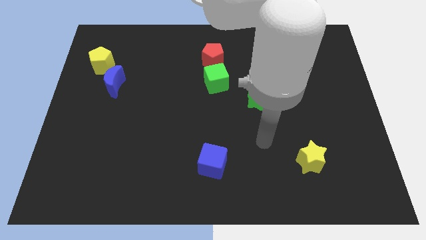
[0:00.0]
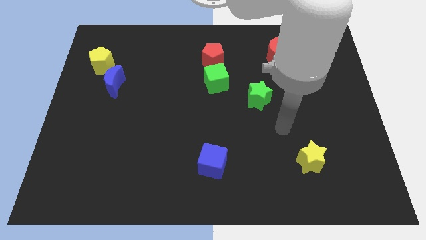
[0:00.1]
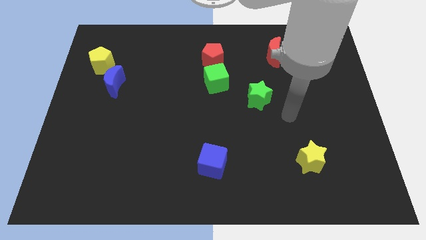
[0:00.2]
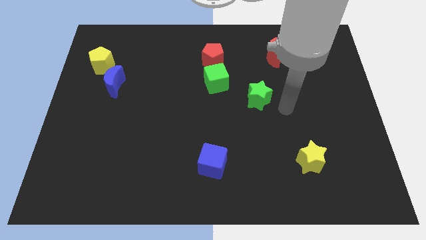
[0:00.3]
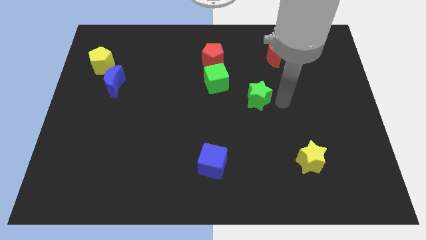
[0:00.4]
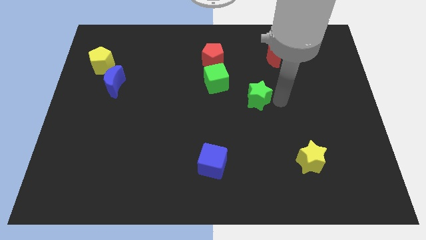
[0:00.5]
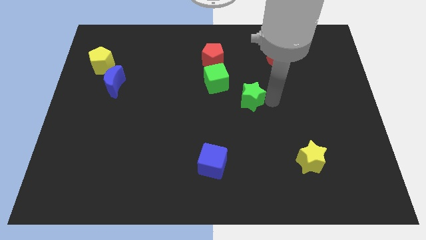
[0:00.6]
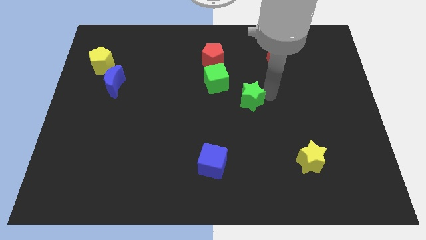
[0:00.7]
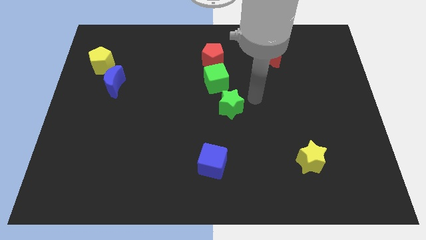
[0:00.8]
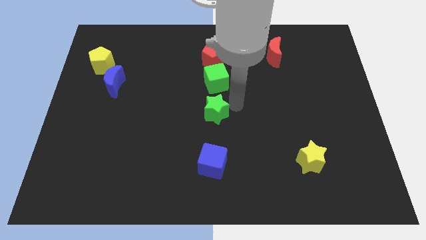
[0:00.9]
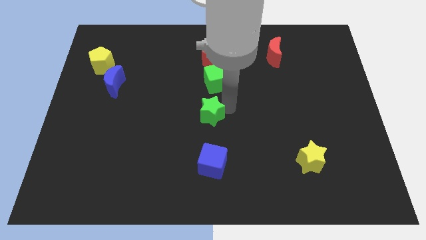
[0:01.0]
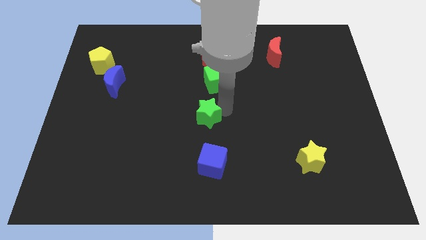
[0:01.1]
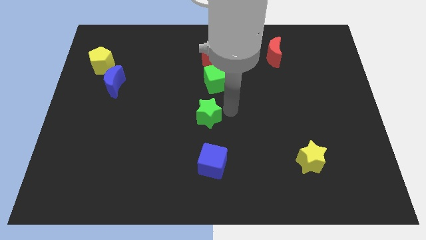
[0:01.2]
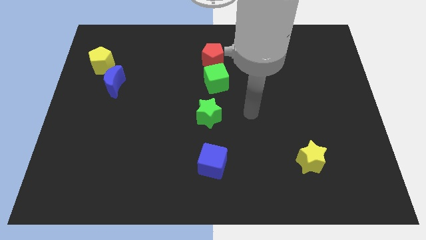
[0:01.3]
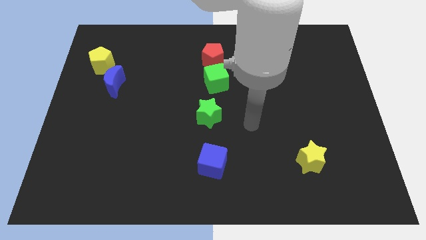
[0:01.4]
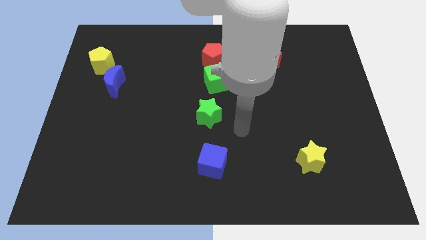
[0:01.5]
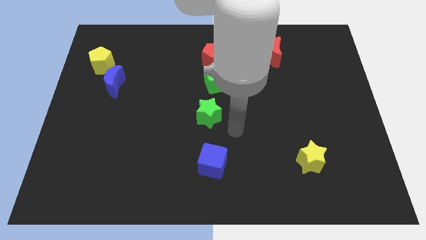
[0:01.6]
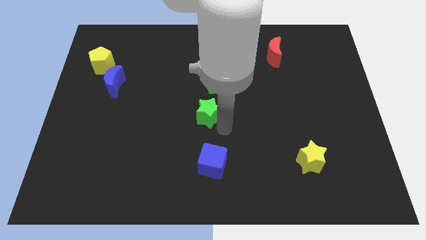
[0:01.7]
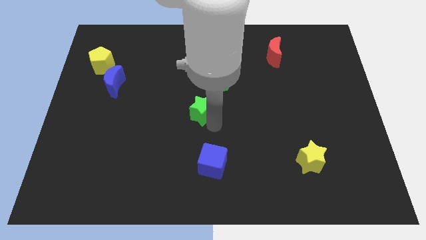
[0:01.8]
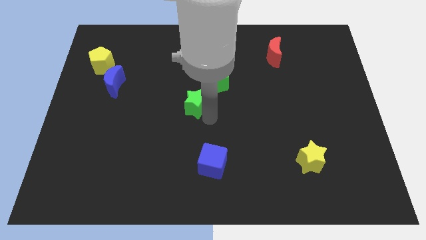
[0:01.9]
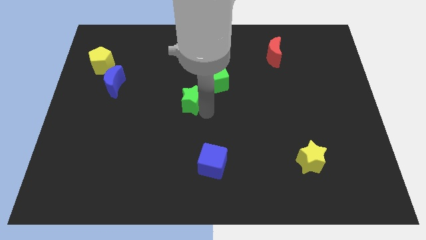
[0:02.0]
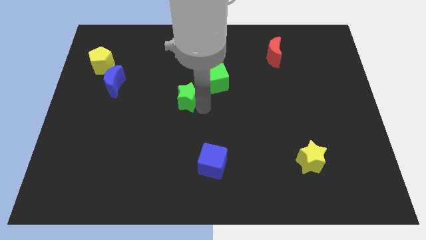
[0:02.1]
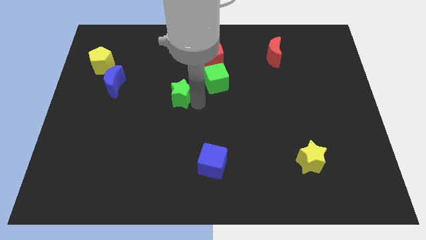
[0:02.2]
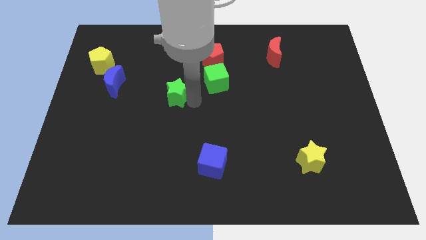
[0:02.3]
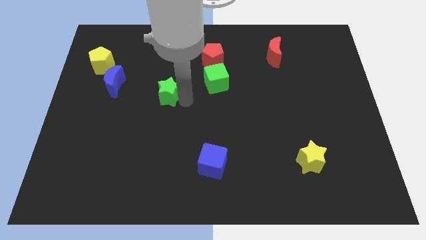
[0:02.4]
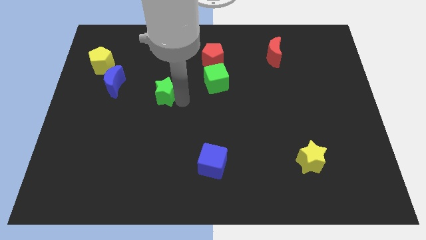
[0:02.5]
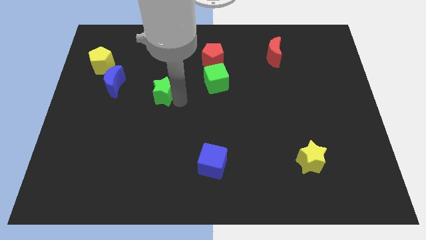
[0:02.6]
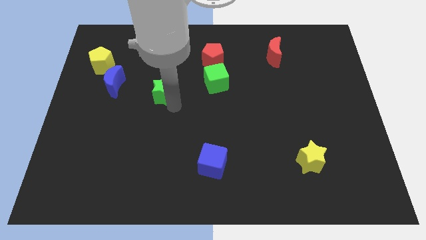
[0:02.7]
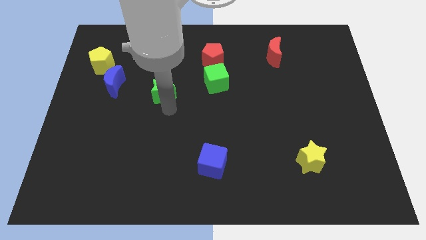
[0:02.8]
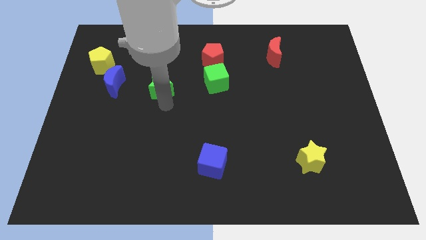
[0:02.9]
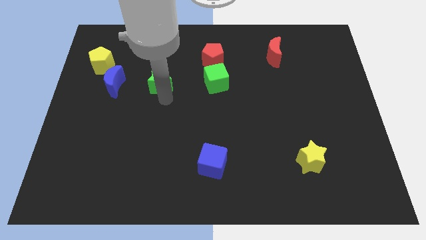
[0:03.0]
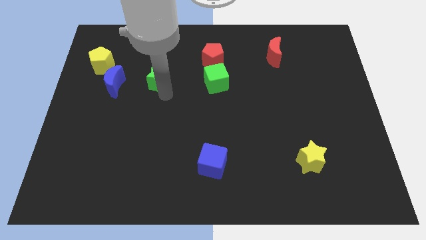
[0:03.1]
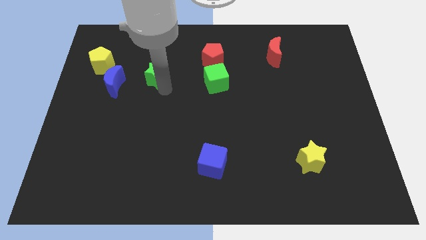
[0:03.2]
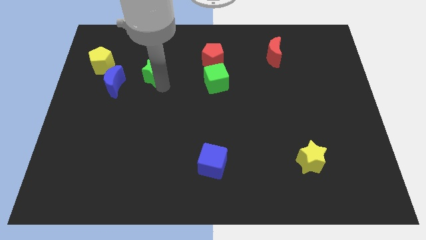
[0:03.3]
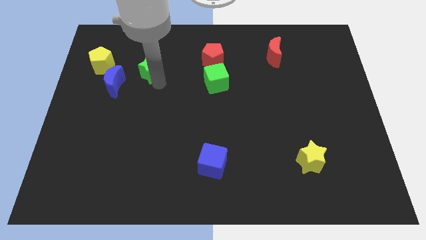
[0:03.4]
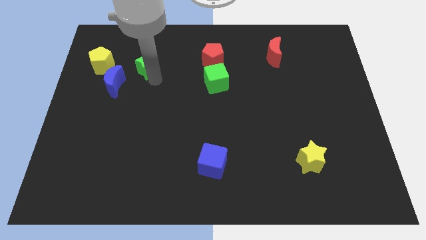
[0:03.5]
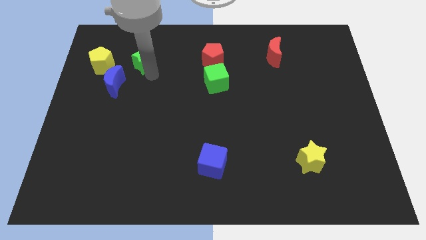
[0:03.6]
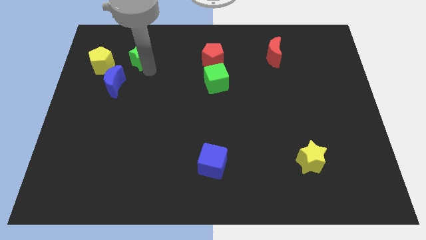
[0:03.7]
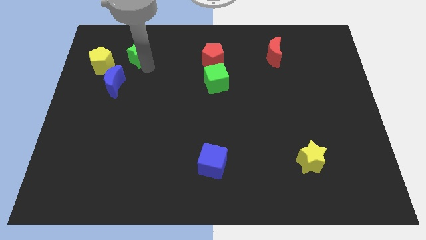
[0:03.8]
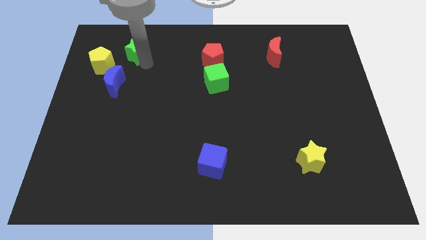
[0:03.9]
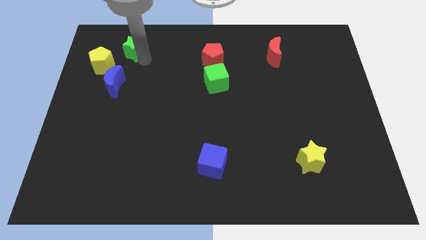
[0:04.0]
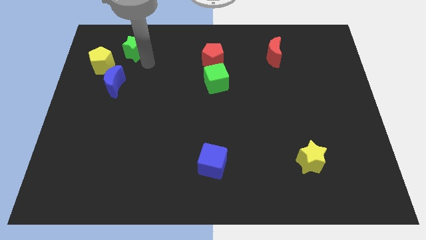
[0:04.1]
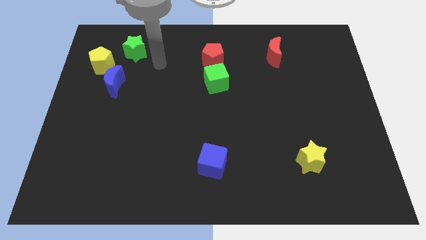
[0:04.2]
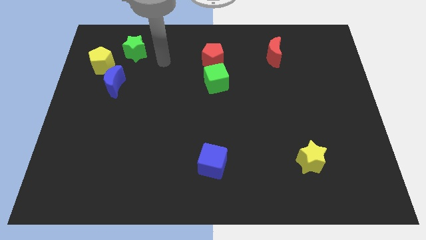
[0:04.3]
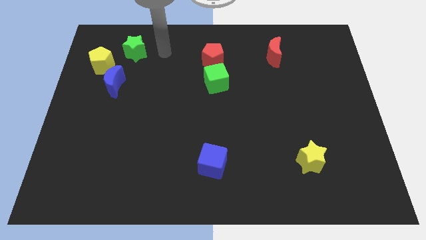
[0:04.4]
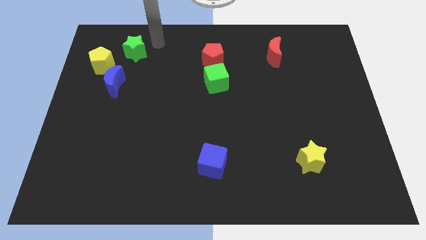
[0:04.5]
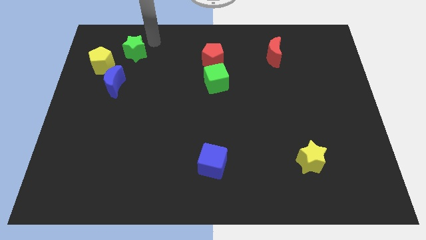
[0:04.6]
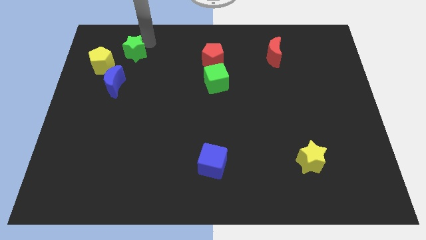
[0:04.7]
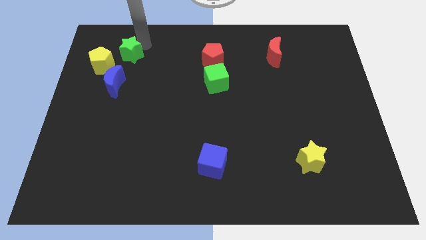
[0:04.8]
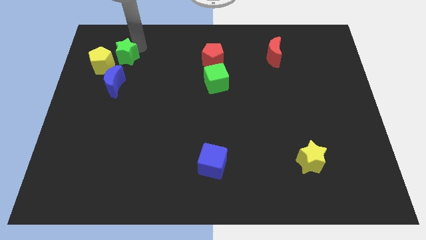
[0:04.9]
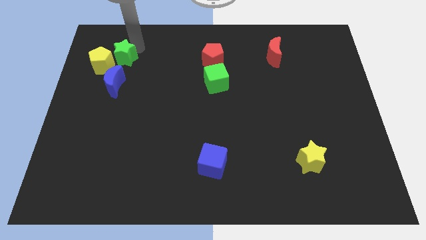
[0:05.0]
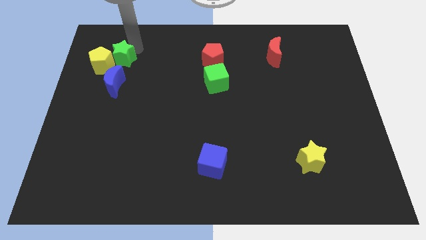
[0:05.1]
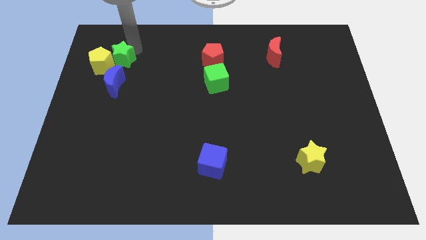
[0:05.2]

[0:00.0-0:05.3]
push the green star towards the yellow pentagon

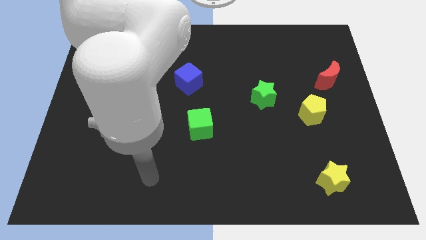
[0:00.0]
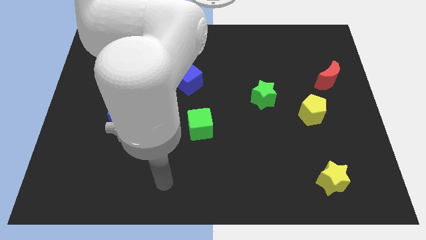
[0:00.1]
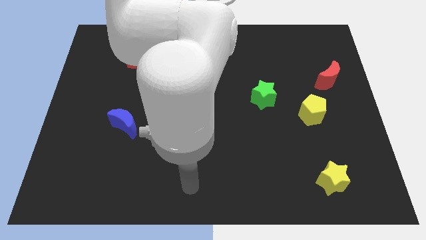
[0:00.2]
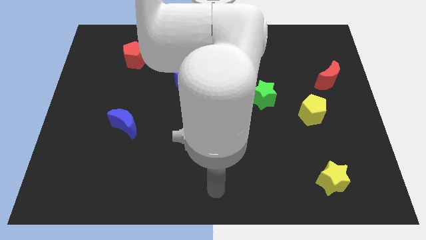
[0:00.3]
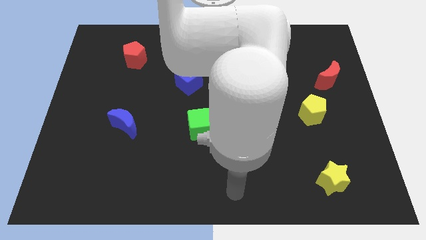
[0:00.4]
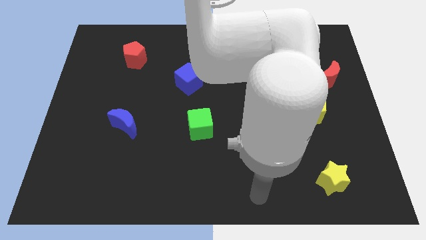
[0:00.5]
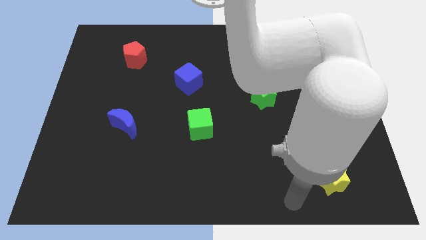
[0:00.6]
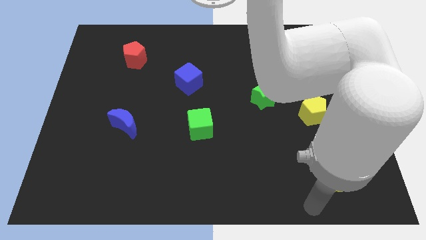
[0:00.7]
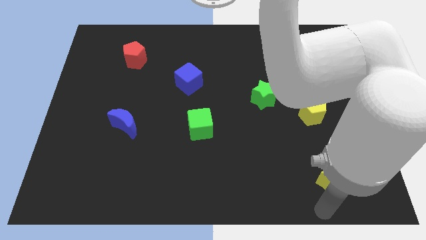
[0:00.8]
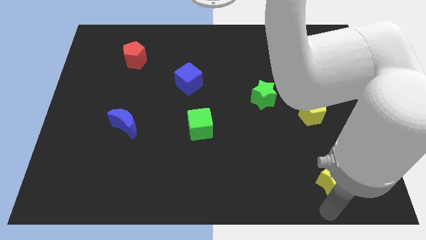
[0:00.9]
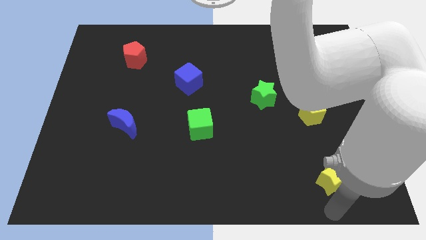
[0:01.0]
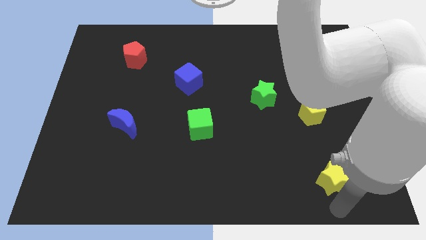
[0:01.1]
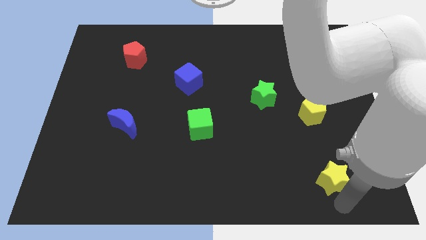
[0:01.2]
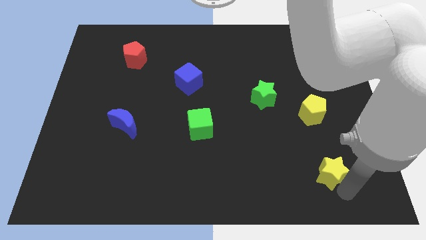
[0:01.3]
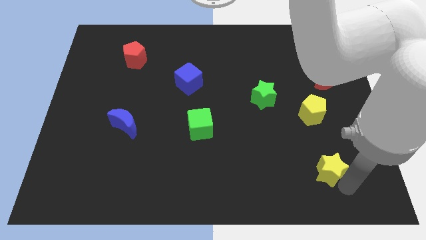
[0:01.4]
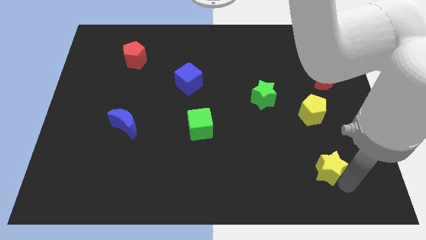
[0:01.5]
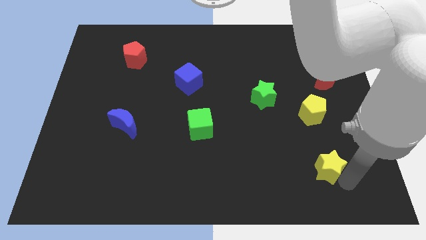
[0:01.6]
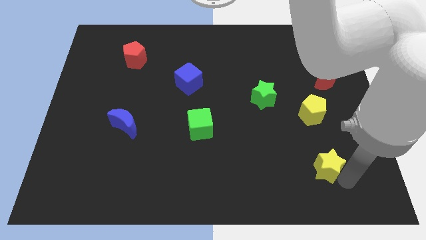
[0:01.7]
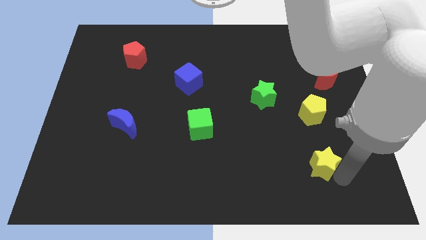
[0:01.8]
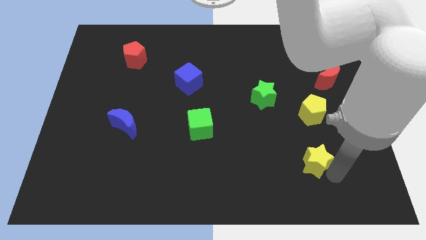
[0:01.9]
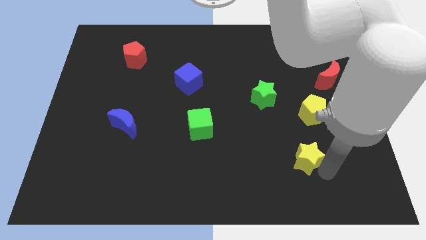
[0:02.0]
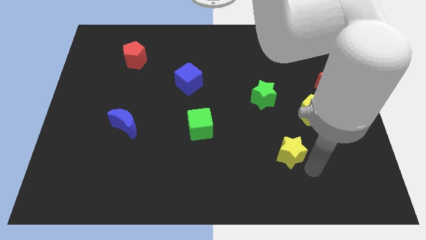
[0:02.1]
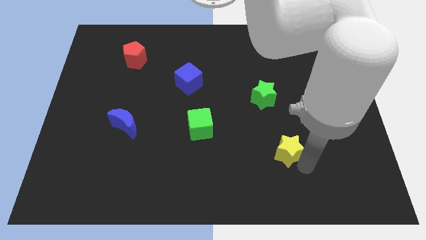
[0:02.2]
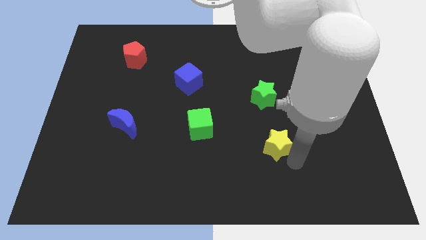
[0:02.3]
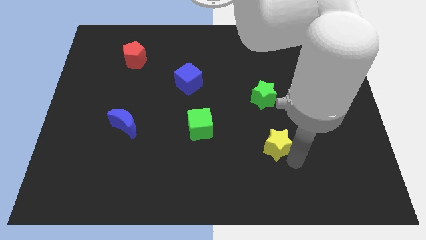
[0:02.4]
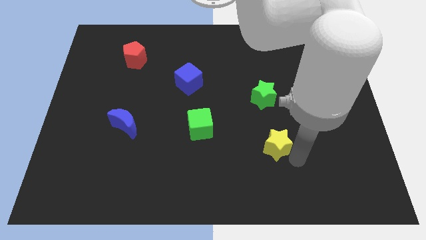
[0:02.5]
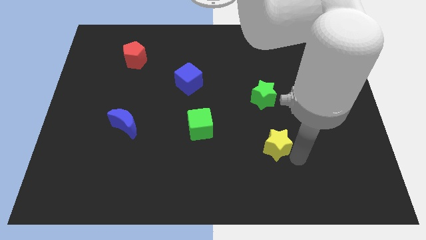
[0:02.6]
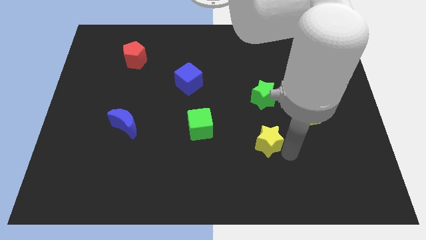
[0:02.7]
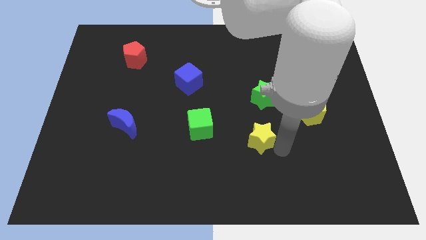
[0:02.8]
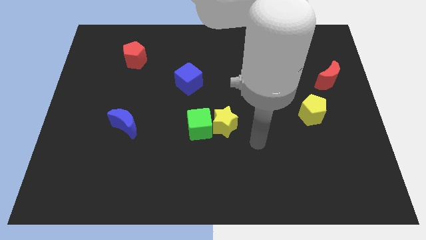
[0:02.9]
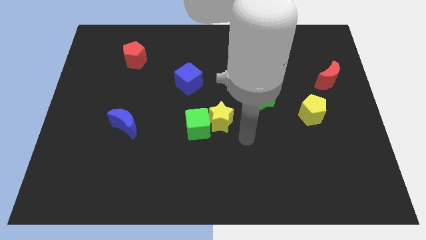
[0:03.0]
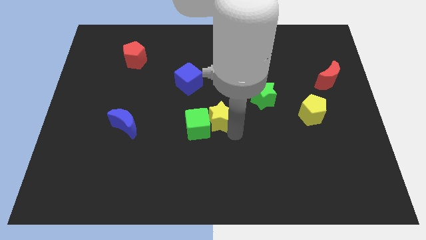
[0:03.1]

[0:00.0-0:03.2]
slide the yellow star towards the green cube

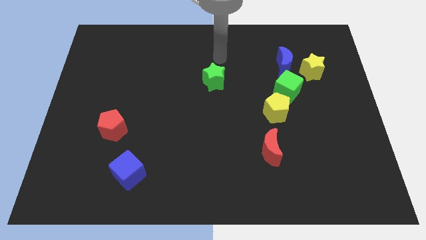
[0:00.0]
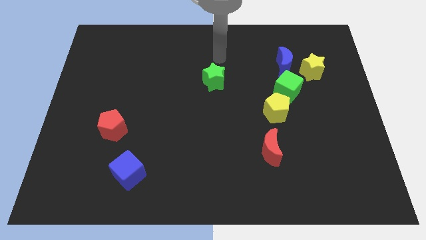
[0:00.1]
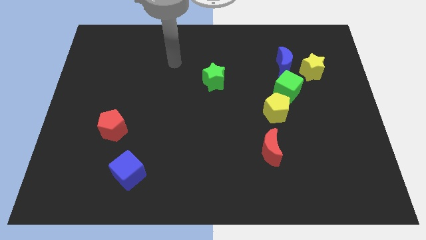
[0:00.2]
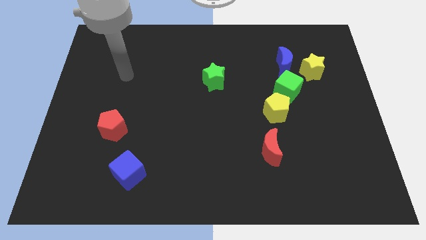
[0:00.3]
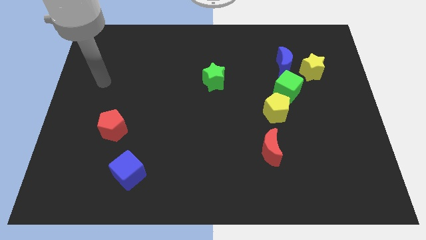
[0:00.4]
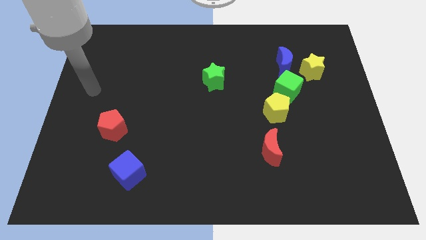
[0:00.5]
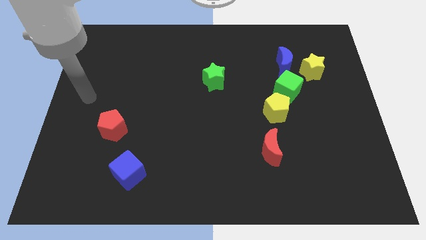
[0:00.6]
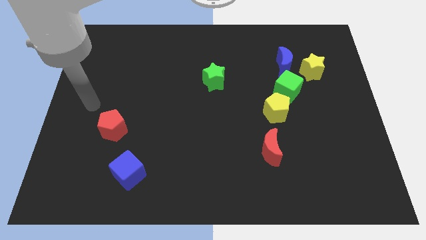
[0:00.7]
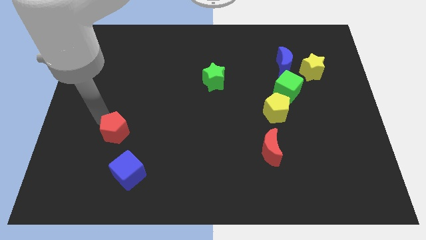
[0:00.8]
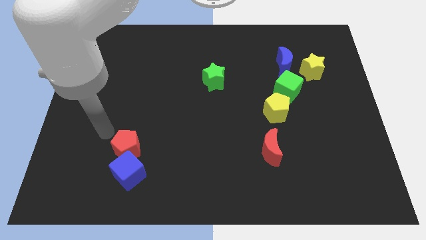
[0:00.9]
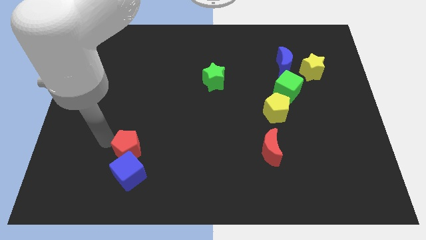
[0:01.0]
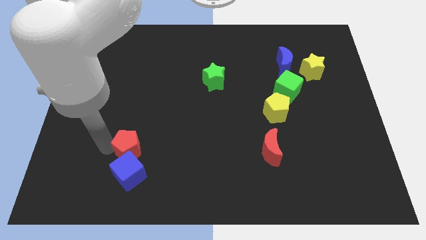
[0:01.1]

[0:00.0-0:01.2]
slide the red pentagon towards the blue cube
